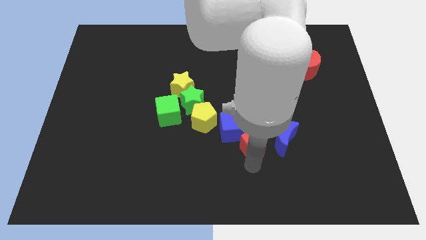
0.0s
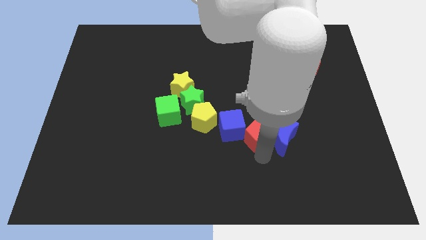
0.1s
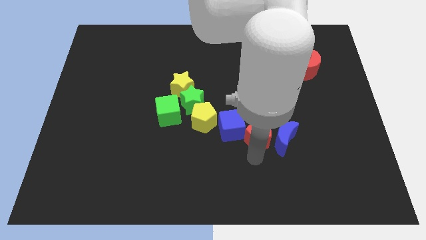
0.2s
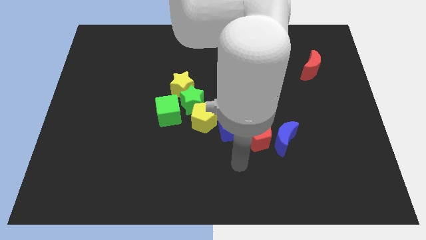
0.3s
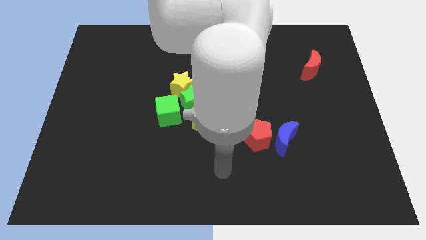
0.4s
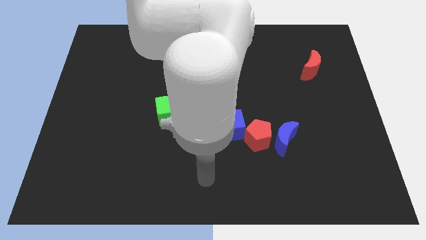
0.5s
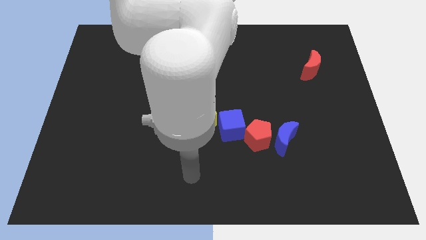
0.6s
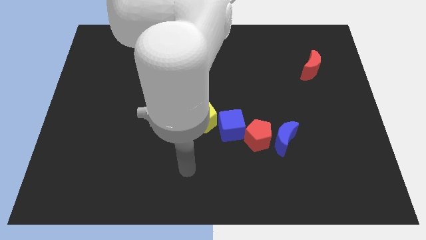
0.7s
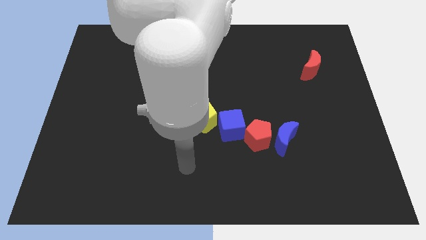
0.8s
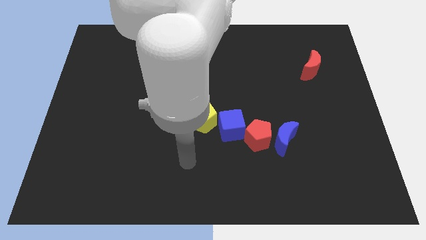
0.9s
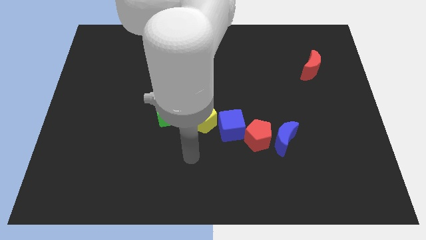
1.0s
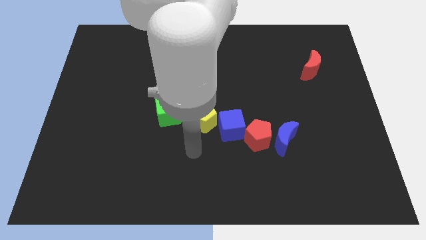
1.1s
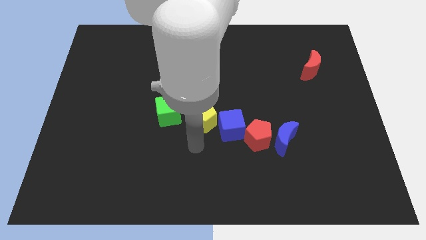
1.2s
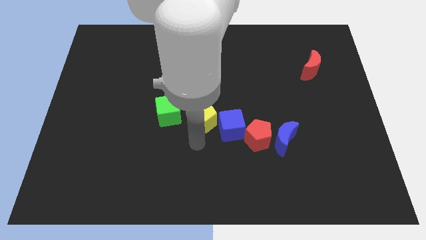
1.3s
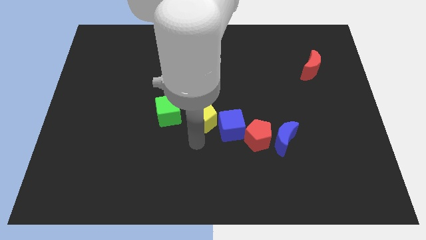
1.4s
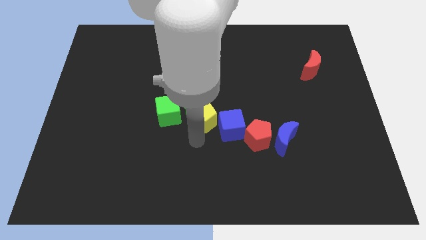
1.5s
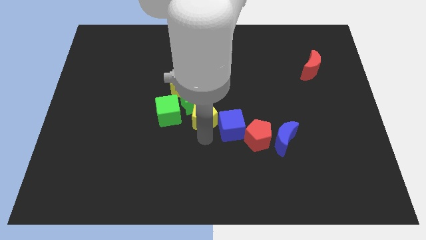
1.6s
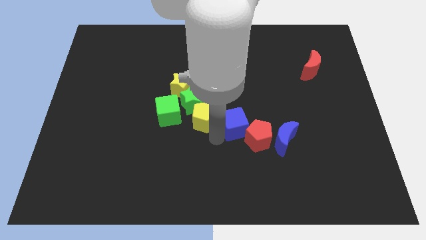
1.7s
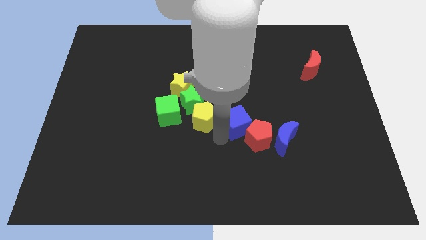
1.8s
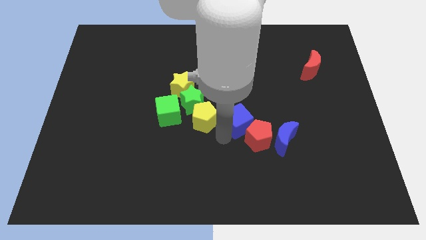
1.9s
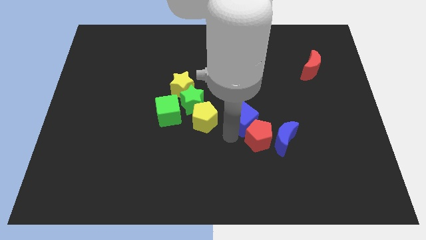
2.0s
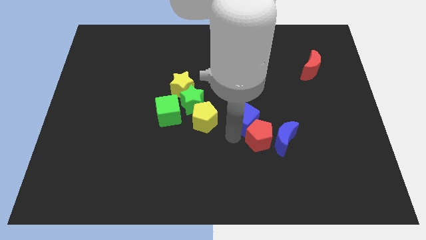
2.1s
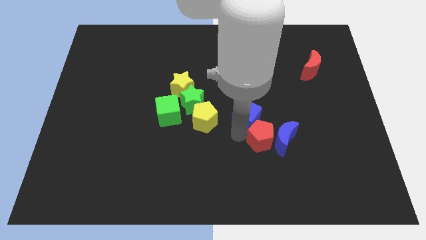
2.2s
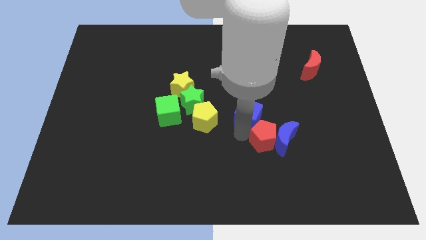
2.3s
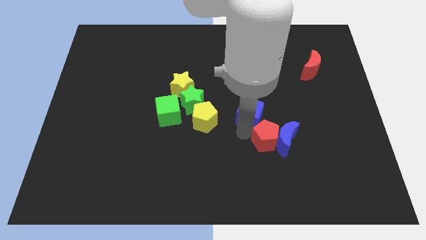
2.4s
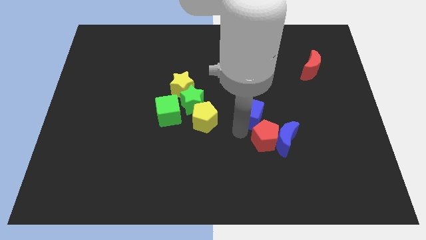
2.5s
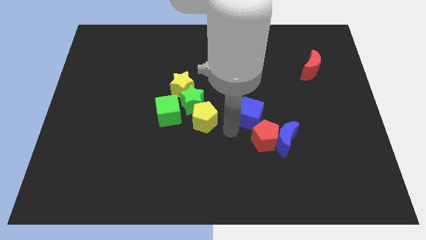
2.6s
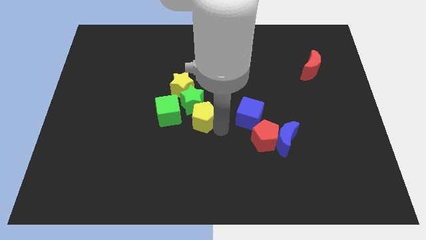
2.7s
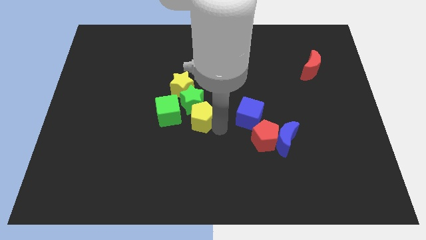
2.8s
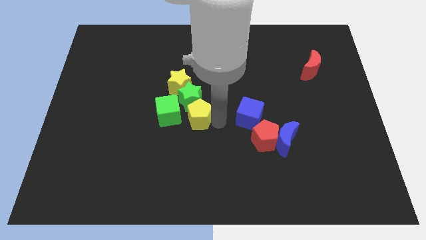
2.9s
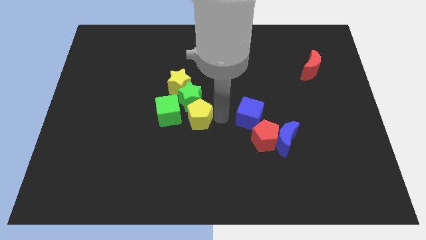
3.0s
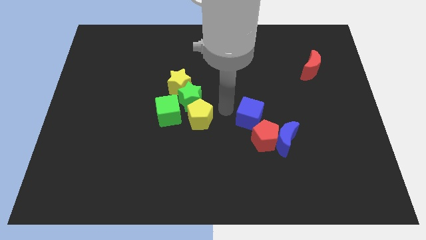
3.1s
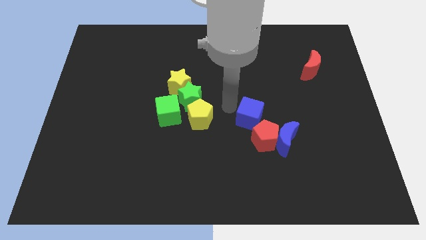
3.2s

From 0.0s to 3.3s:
separate the blue cube and yellow pentagon

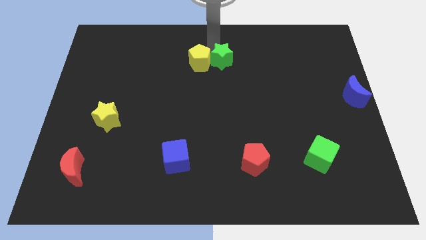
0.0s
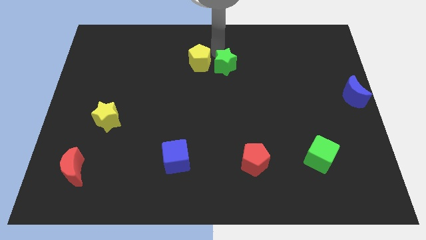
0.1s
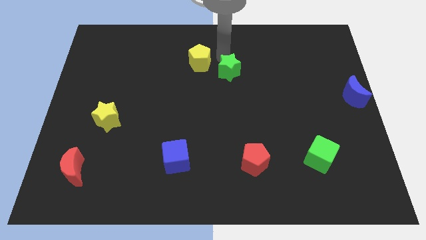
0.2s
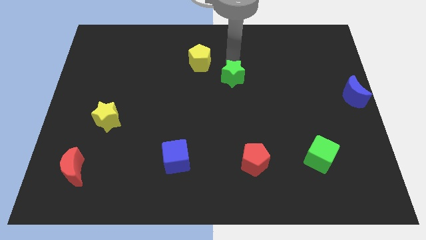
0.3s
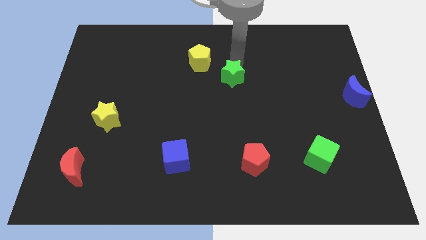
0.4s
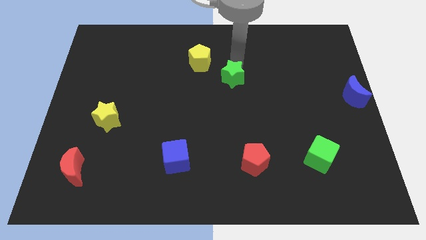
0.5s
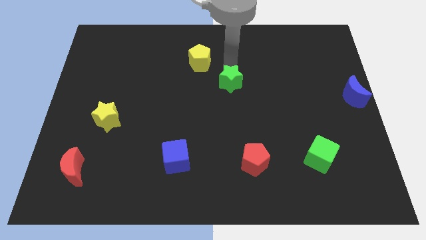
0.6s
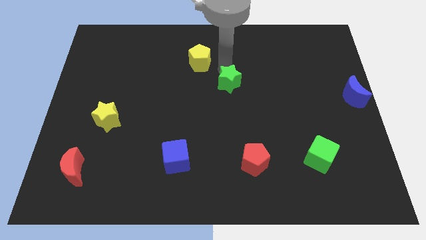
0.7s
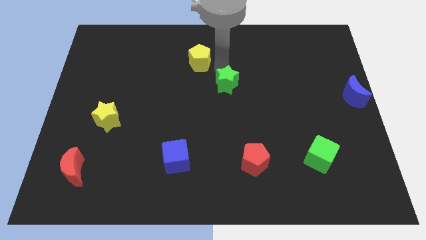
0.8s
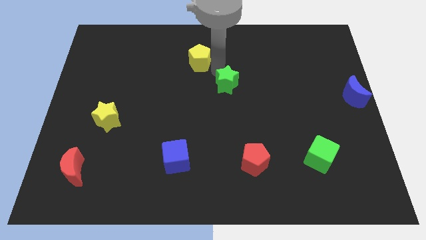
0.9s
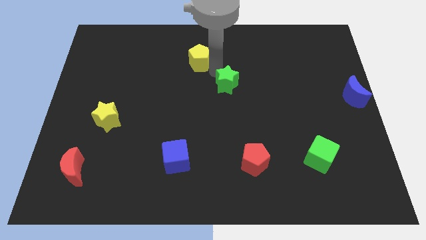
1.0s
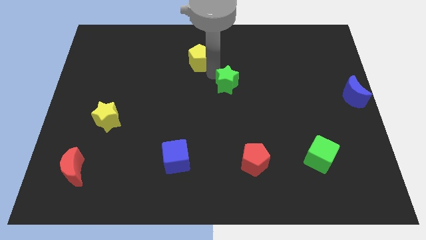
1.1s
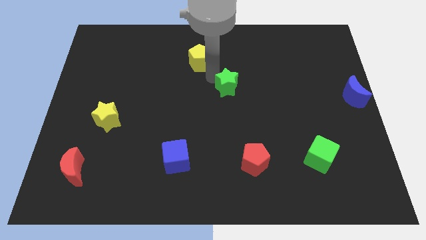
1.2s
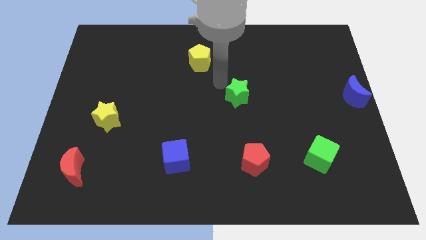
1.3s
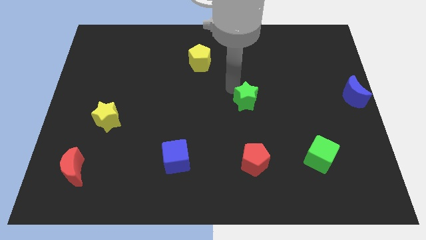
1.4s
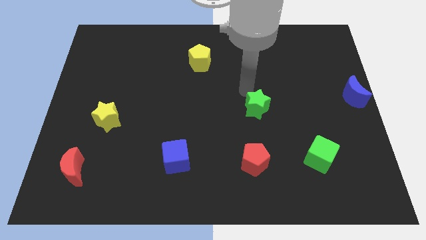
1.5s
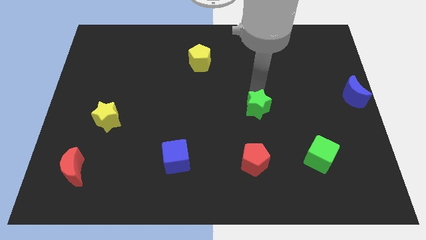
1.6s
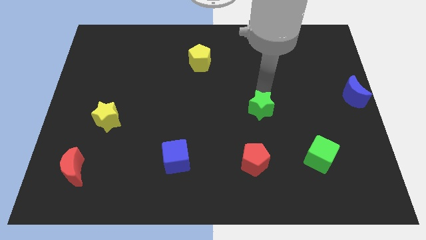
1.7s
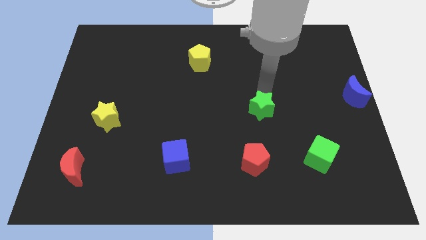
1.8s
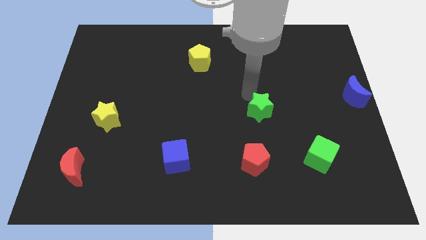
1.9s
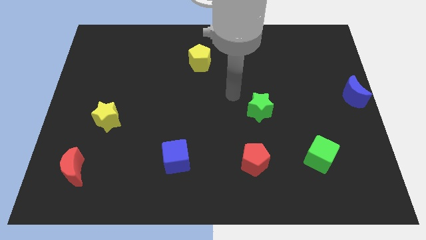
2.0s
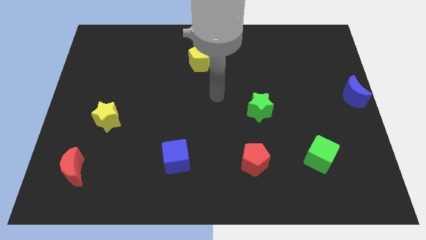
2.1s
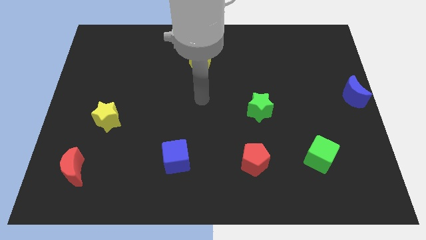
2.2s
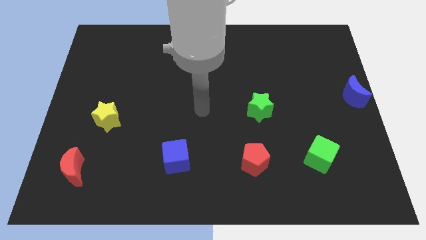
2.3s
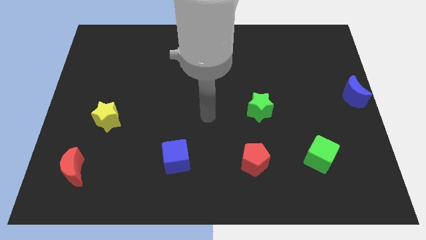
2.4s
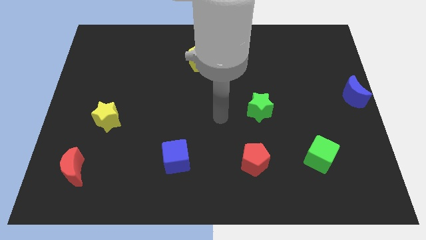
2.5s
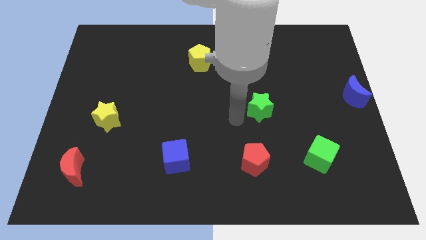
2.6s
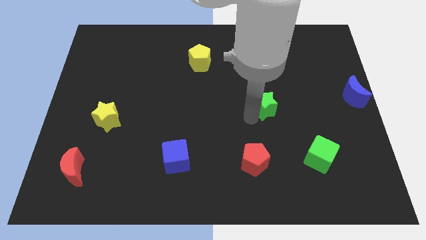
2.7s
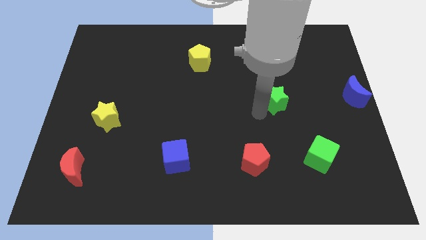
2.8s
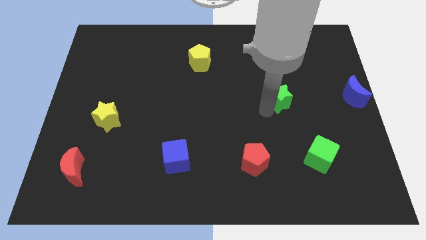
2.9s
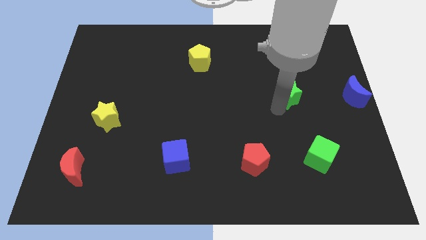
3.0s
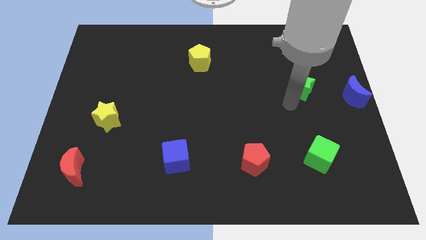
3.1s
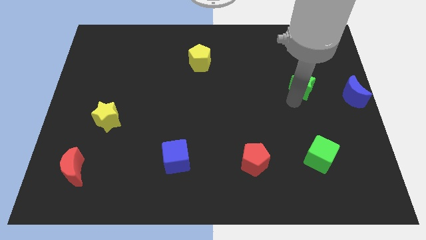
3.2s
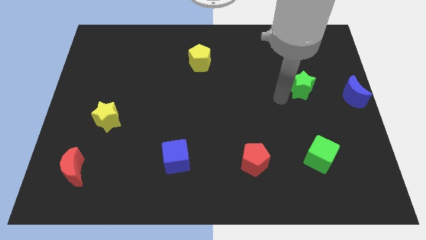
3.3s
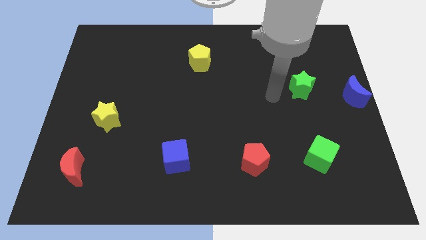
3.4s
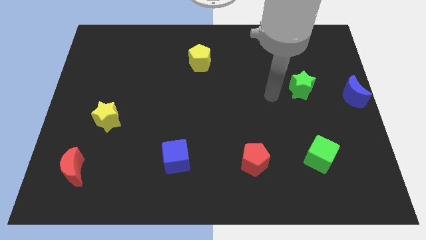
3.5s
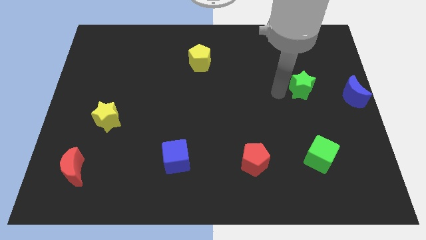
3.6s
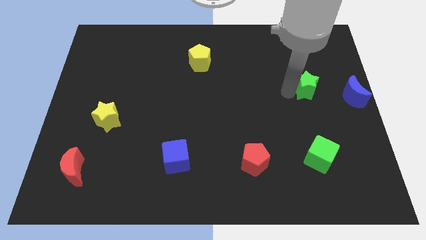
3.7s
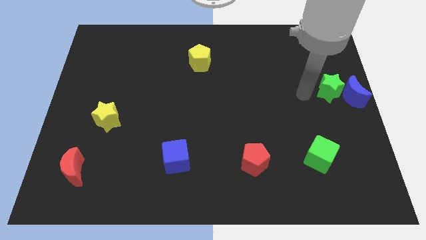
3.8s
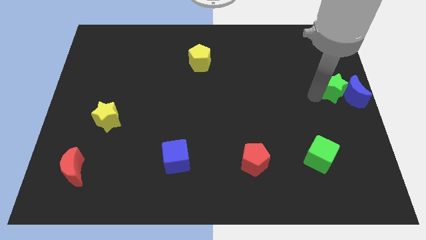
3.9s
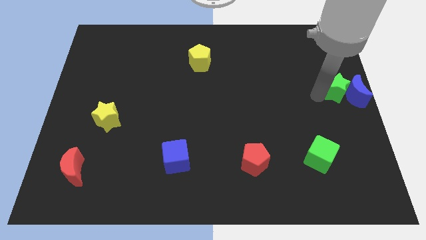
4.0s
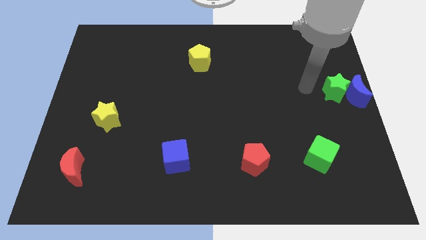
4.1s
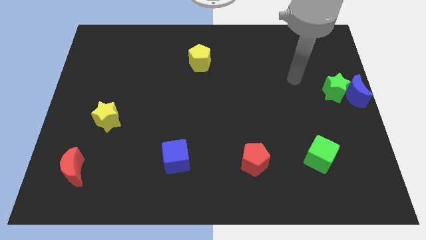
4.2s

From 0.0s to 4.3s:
put the green star into the left side of the blue moon

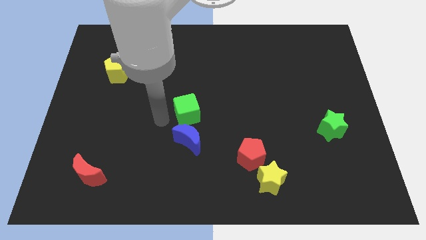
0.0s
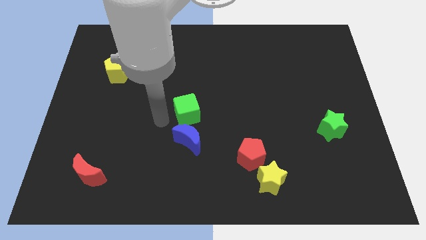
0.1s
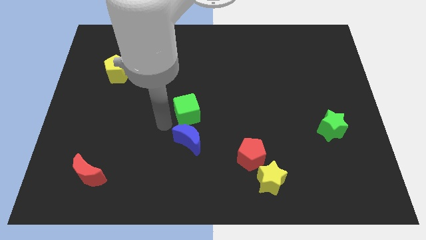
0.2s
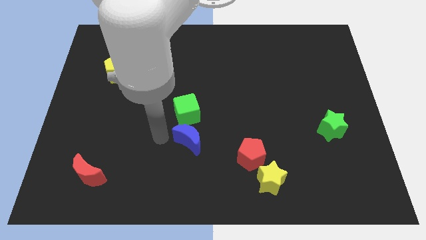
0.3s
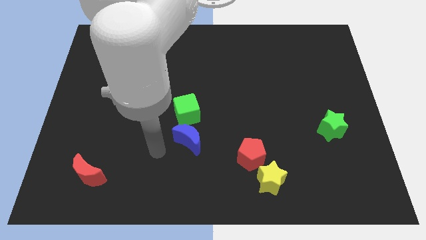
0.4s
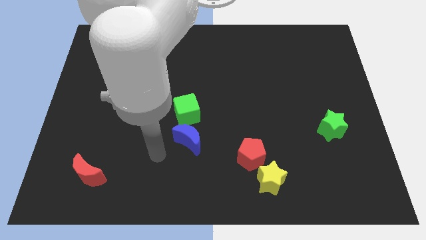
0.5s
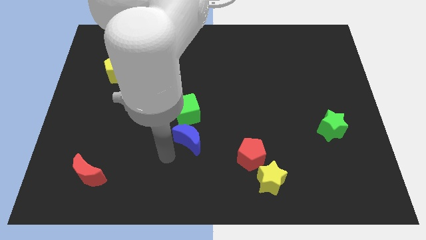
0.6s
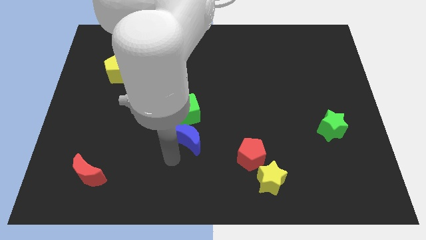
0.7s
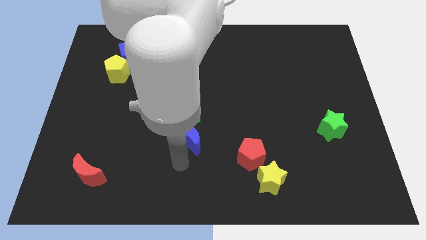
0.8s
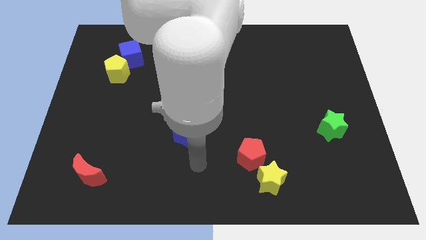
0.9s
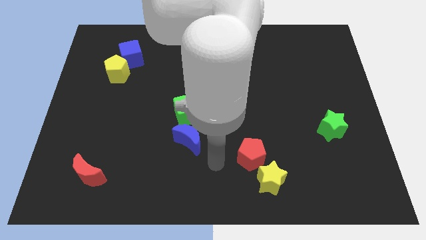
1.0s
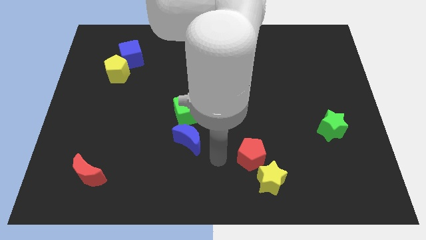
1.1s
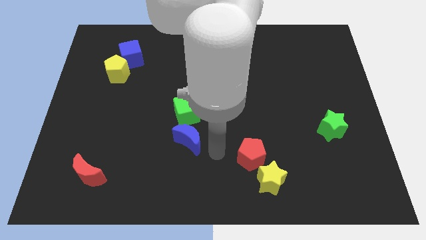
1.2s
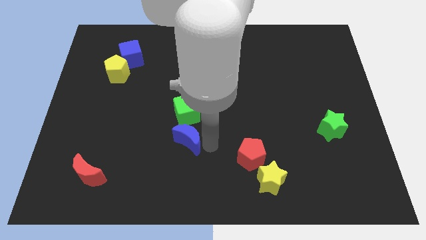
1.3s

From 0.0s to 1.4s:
point your arm at the right side of the blue moon
